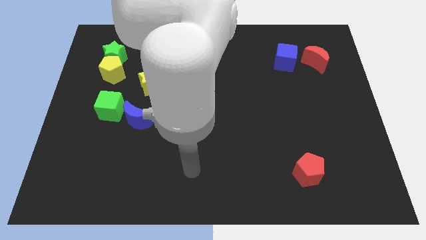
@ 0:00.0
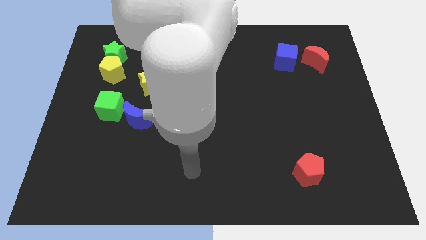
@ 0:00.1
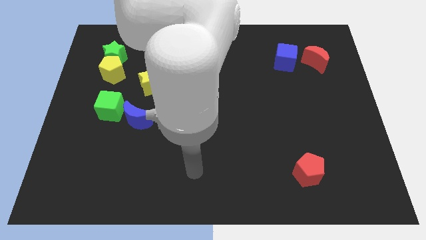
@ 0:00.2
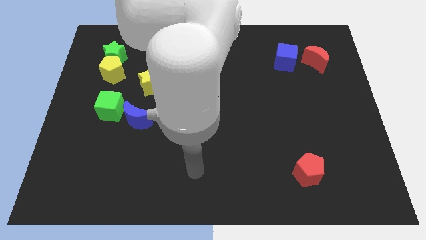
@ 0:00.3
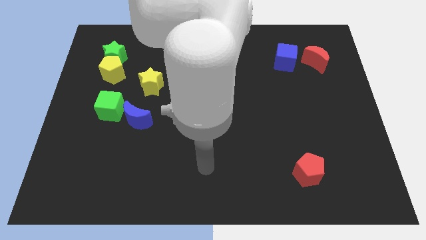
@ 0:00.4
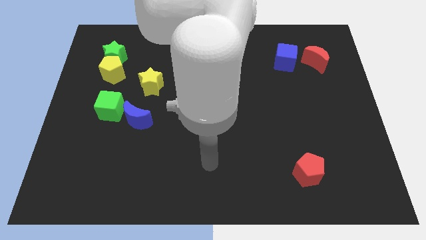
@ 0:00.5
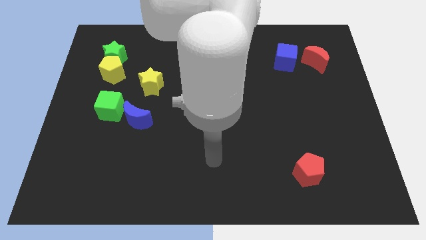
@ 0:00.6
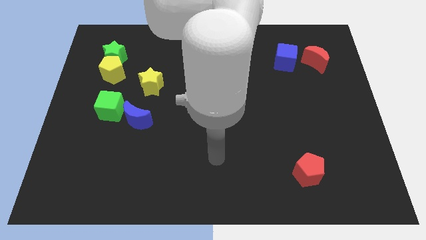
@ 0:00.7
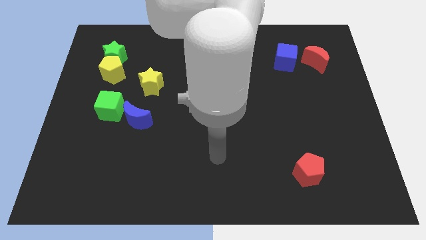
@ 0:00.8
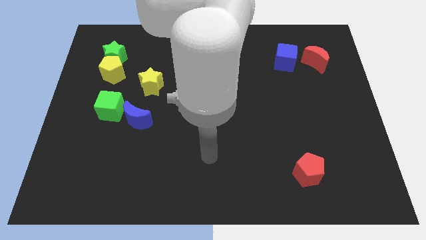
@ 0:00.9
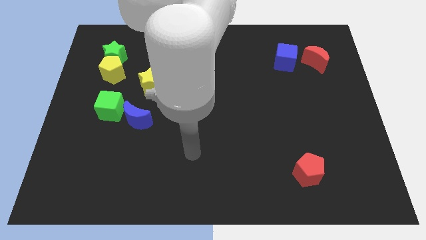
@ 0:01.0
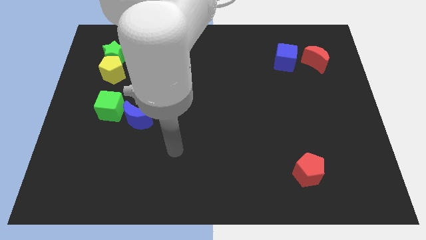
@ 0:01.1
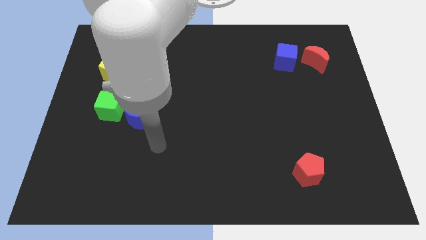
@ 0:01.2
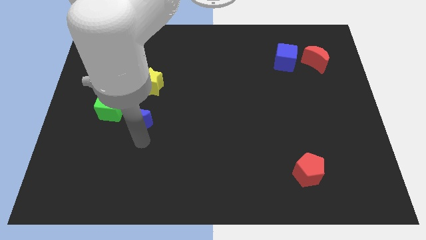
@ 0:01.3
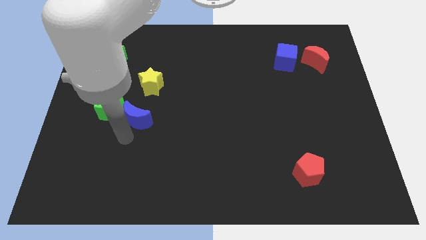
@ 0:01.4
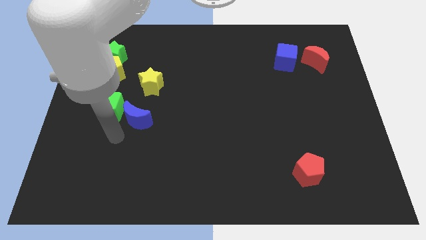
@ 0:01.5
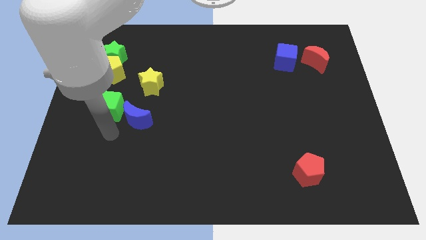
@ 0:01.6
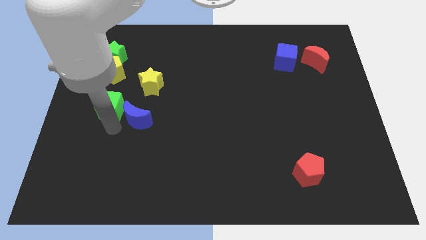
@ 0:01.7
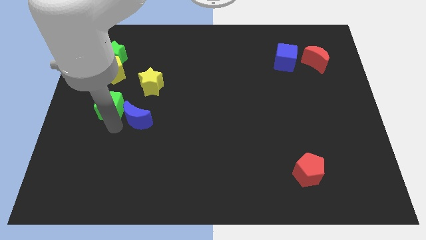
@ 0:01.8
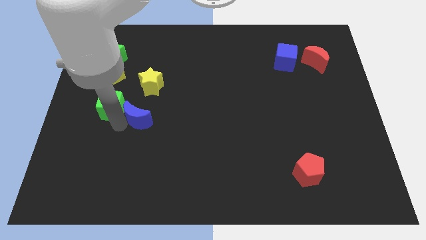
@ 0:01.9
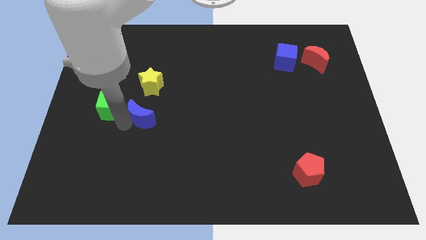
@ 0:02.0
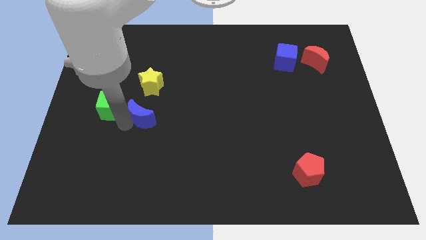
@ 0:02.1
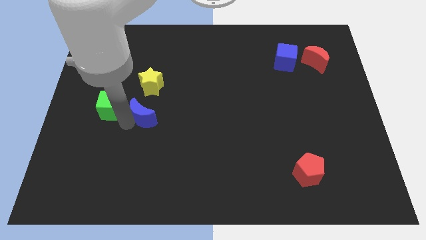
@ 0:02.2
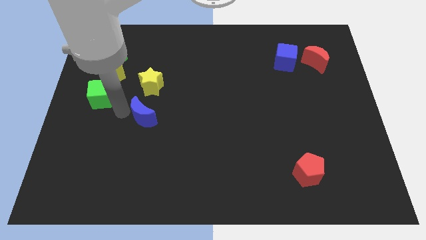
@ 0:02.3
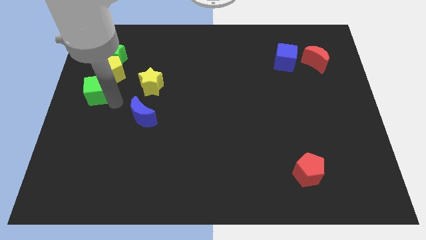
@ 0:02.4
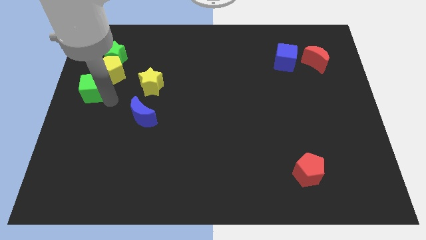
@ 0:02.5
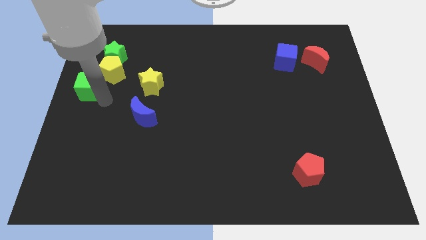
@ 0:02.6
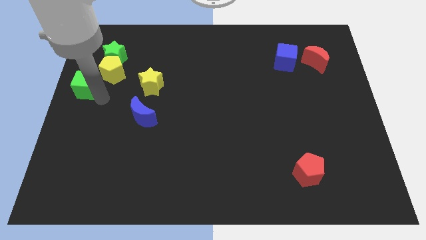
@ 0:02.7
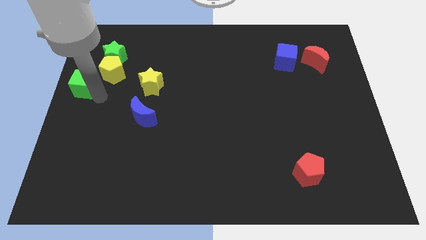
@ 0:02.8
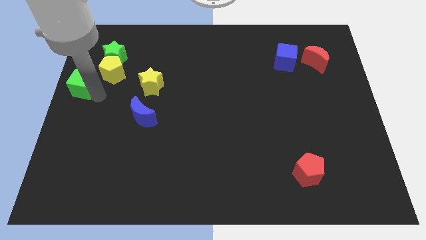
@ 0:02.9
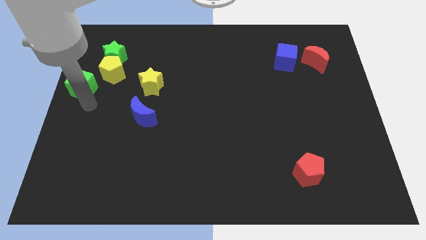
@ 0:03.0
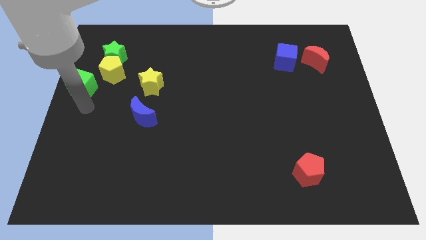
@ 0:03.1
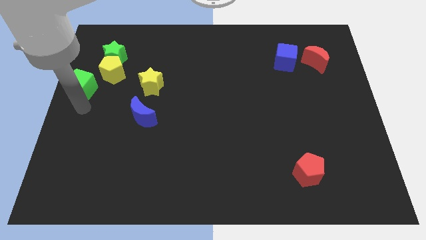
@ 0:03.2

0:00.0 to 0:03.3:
place the green cube diagonally to the yellow pentagon

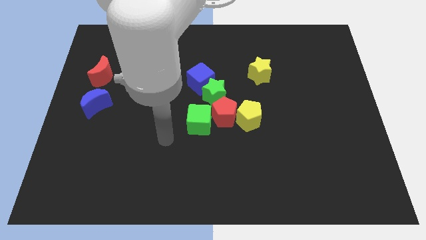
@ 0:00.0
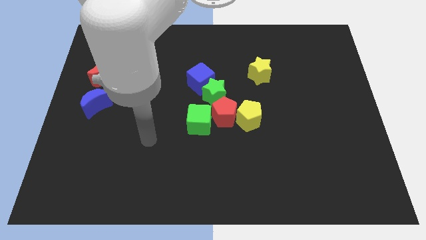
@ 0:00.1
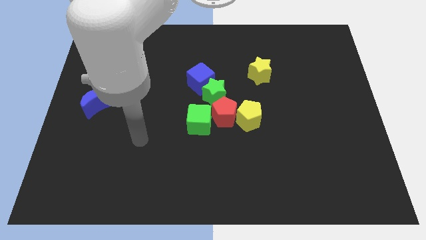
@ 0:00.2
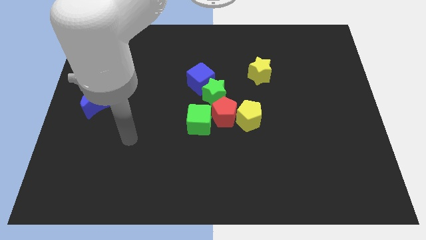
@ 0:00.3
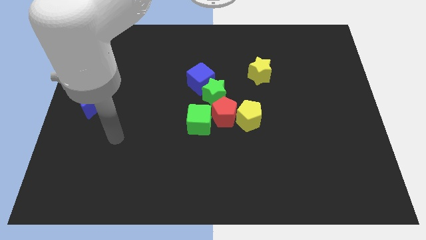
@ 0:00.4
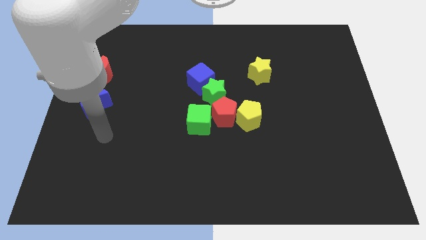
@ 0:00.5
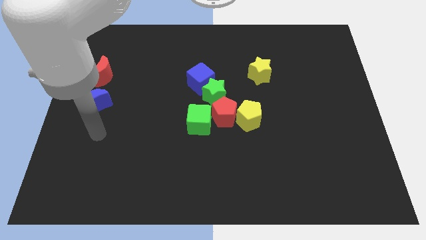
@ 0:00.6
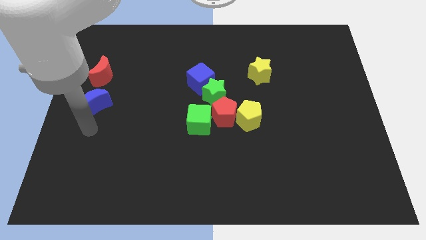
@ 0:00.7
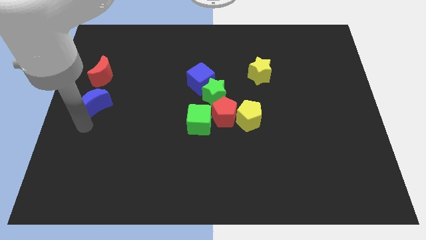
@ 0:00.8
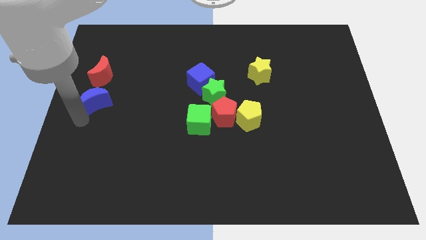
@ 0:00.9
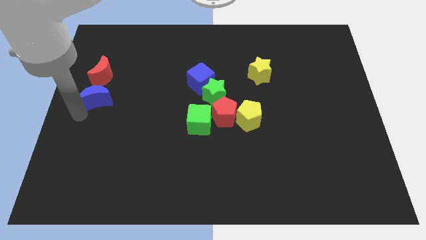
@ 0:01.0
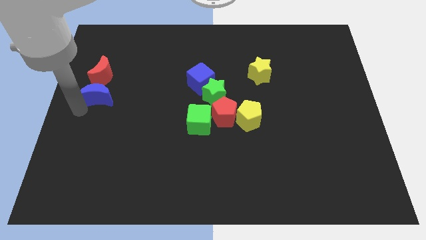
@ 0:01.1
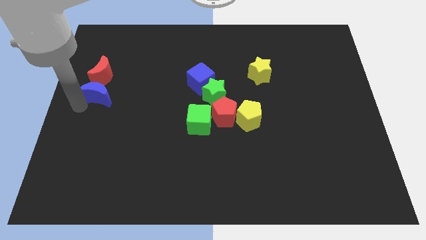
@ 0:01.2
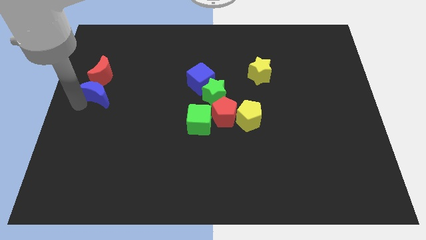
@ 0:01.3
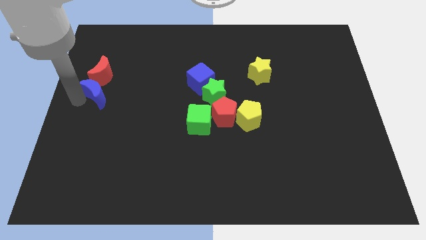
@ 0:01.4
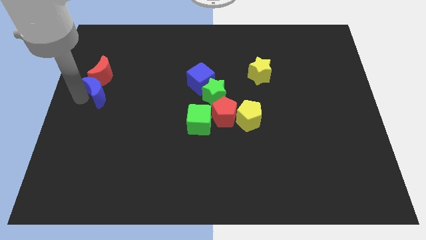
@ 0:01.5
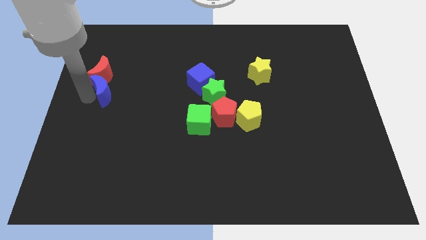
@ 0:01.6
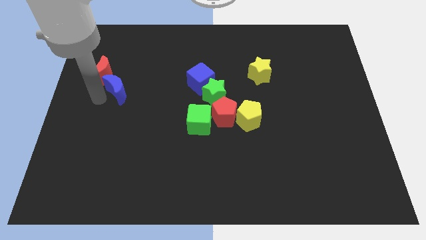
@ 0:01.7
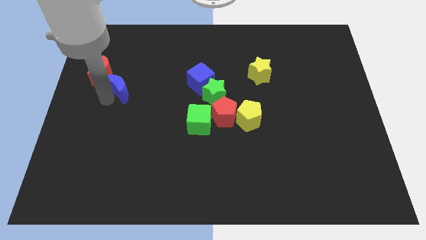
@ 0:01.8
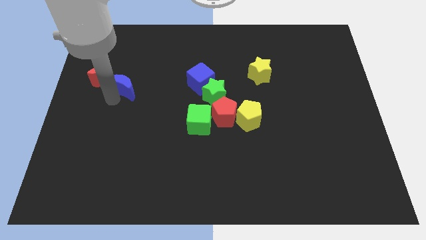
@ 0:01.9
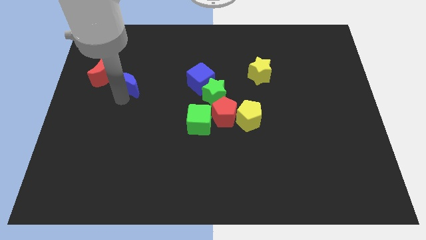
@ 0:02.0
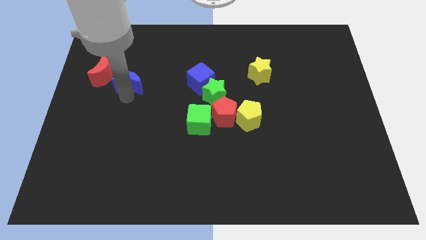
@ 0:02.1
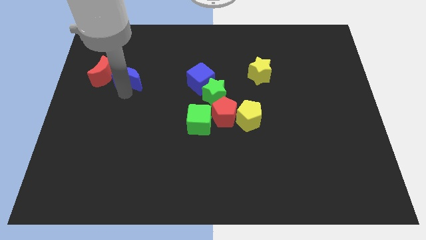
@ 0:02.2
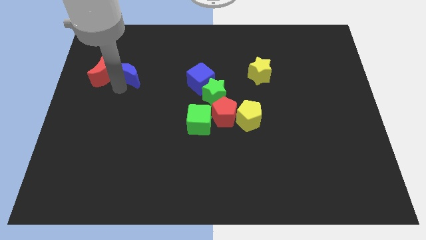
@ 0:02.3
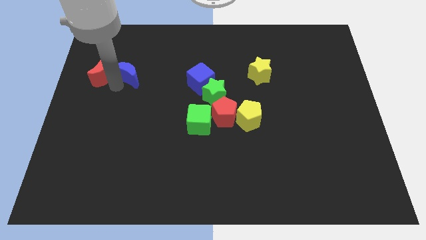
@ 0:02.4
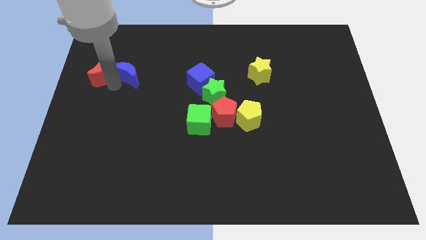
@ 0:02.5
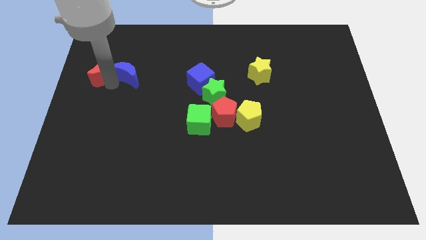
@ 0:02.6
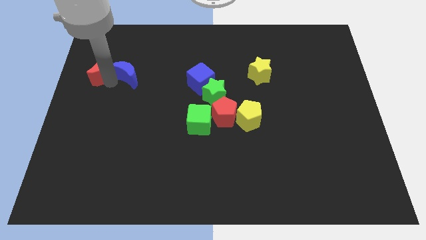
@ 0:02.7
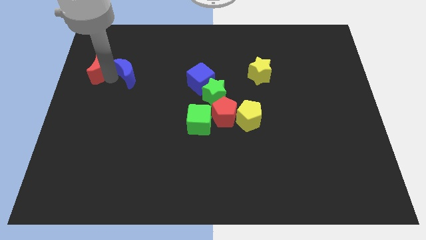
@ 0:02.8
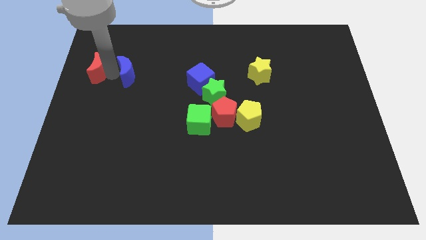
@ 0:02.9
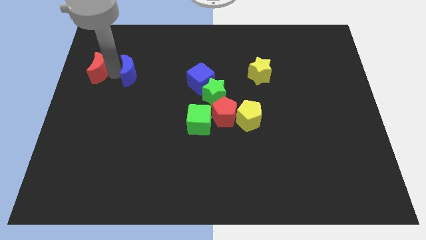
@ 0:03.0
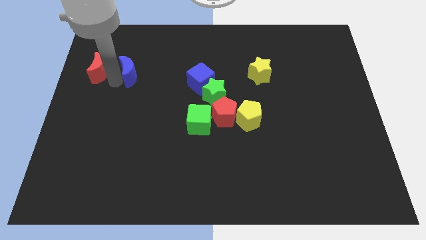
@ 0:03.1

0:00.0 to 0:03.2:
move blue moon right beside the red moon

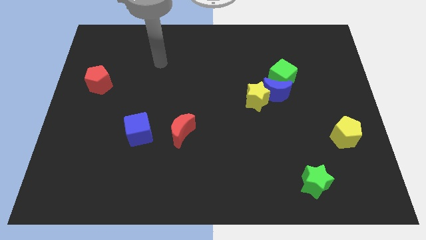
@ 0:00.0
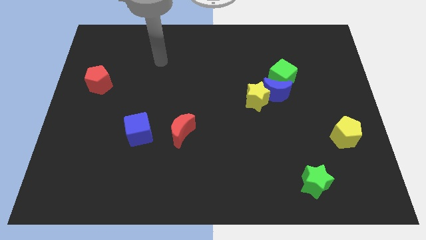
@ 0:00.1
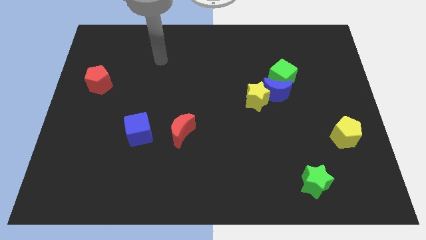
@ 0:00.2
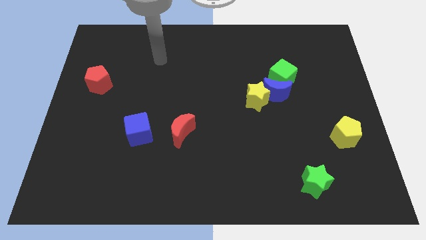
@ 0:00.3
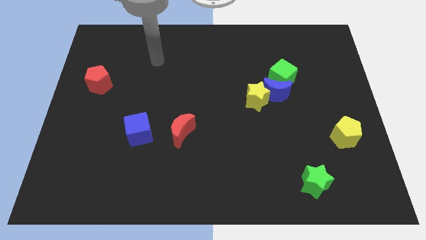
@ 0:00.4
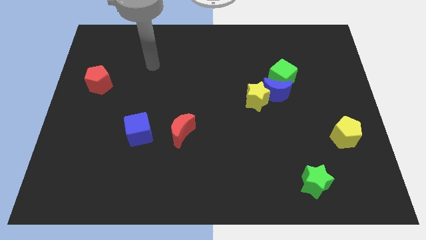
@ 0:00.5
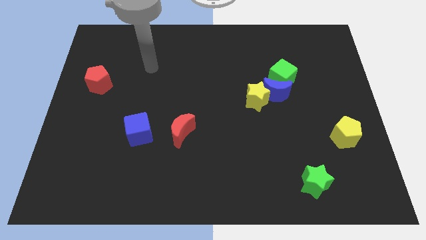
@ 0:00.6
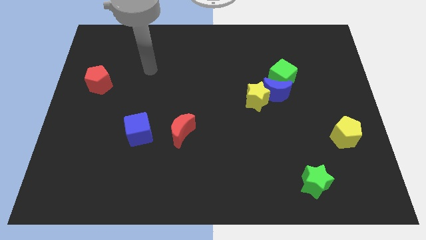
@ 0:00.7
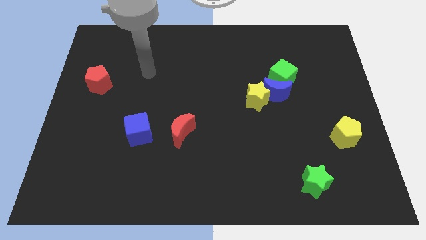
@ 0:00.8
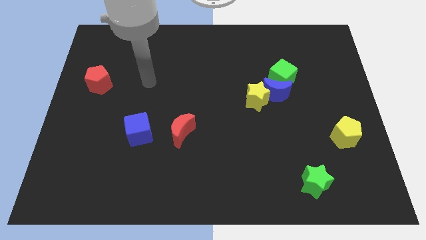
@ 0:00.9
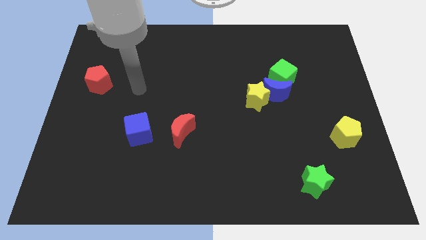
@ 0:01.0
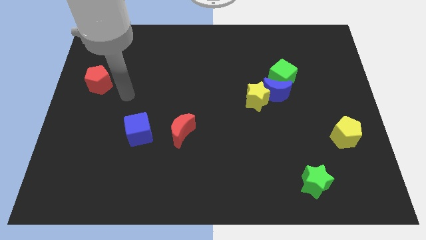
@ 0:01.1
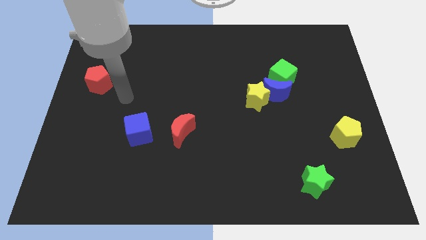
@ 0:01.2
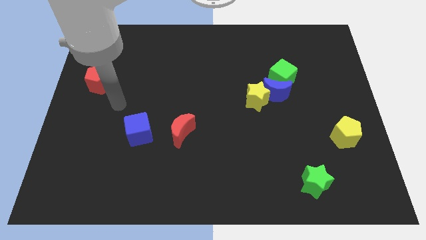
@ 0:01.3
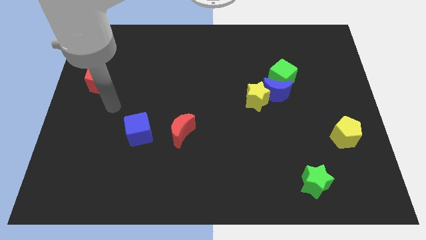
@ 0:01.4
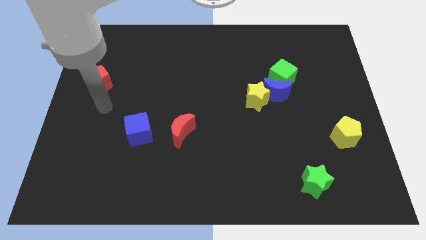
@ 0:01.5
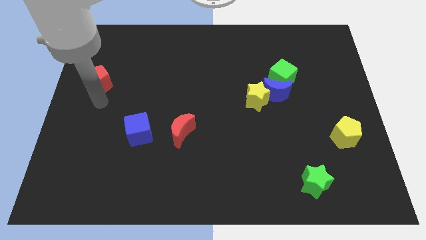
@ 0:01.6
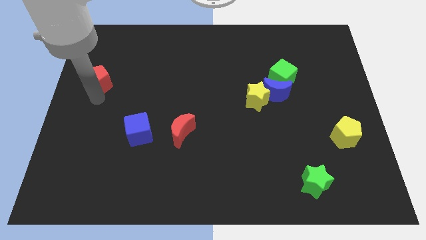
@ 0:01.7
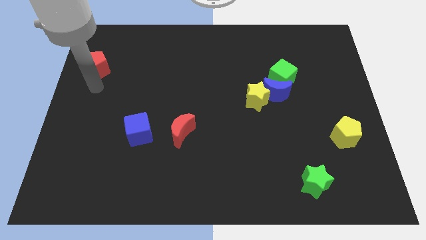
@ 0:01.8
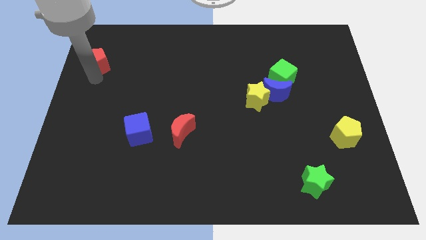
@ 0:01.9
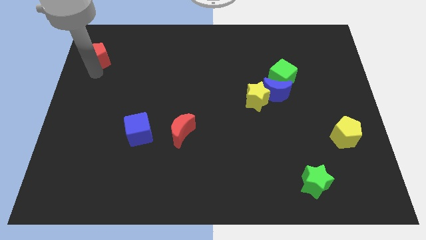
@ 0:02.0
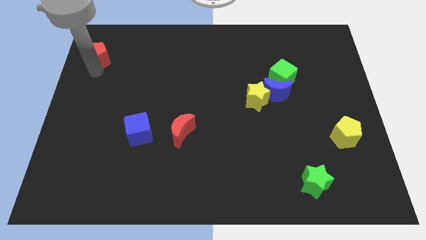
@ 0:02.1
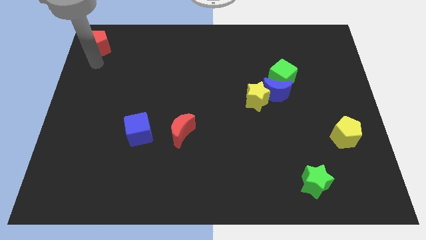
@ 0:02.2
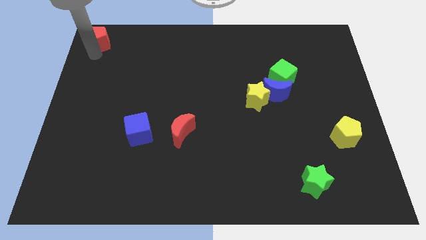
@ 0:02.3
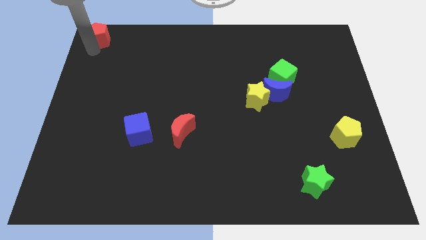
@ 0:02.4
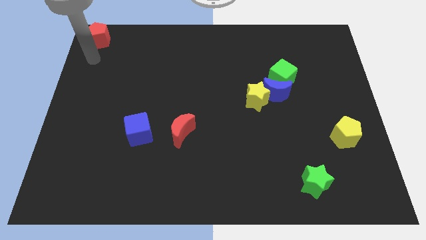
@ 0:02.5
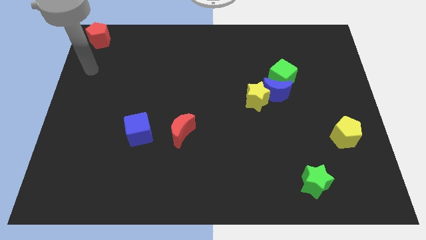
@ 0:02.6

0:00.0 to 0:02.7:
place the red pentagon at top left side of the board
